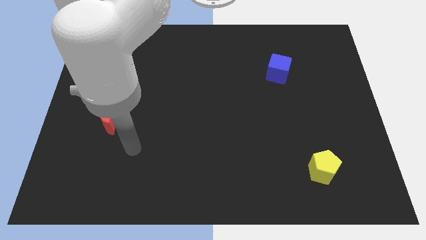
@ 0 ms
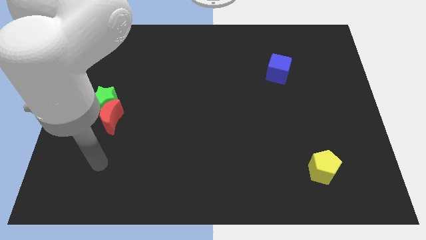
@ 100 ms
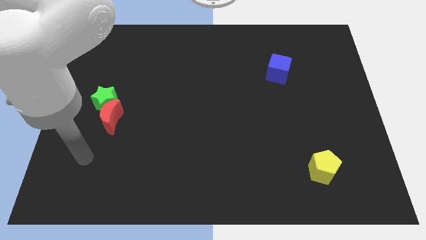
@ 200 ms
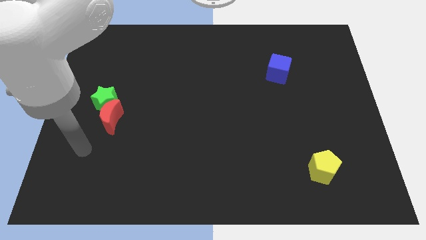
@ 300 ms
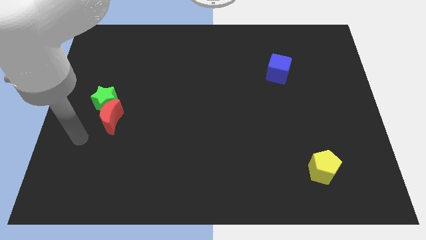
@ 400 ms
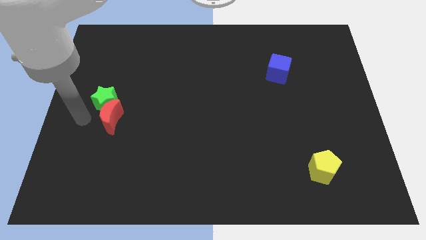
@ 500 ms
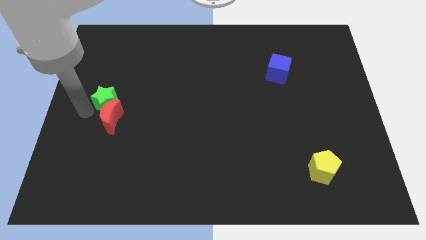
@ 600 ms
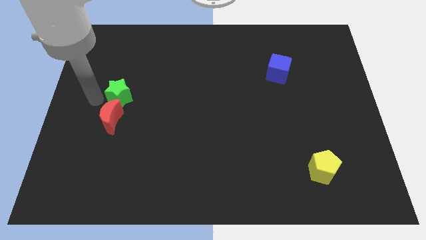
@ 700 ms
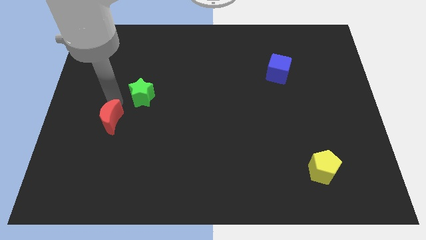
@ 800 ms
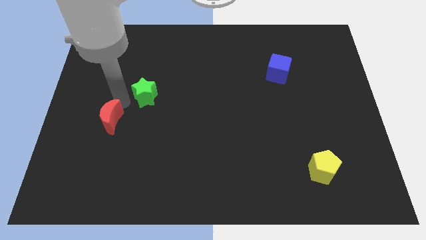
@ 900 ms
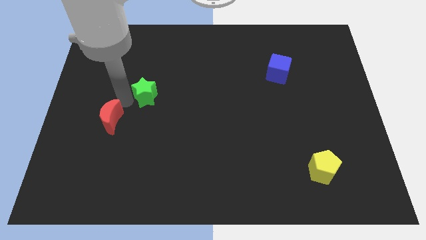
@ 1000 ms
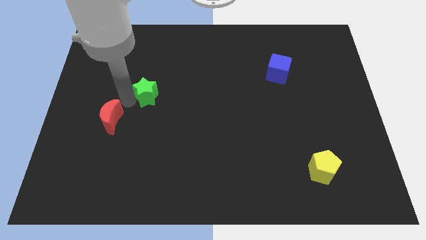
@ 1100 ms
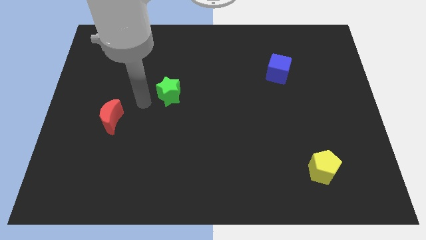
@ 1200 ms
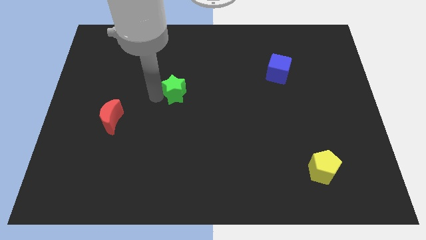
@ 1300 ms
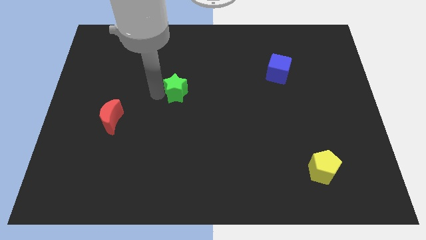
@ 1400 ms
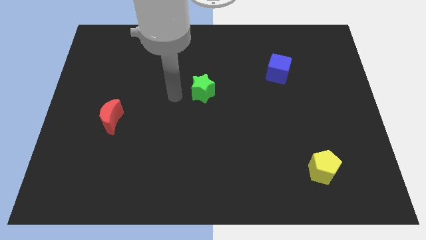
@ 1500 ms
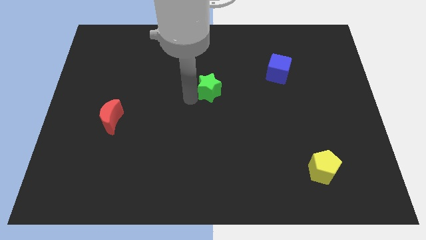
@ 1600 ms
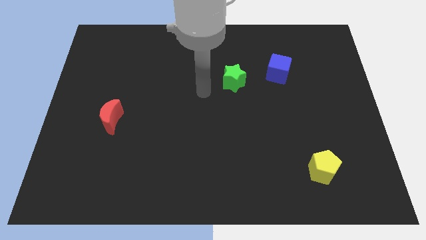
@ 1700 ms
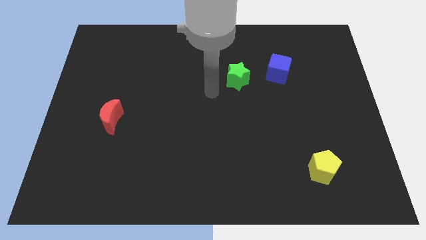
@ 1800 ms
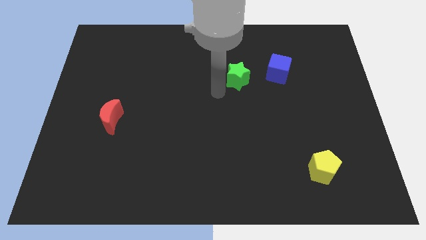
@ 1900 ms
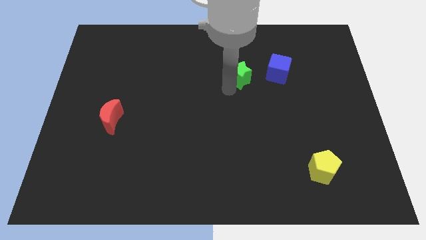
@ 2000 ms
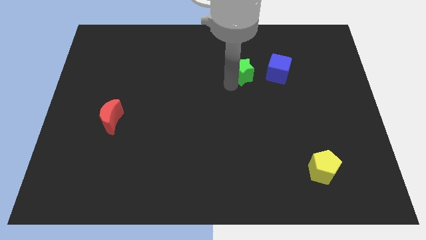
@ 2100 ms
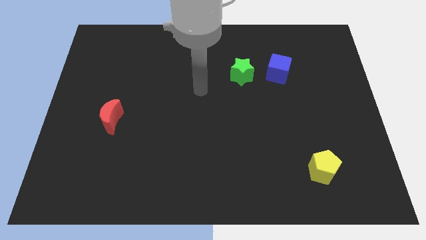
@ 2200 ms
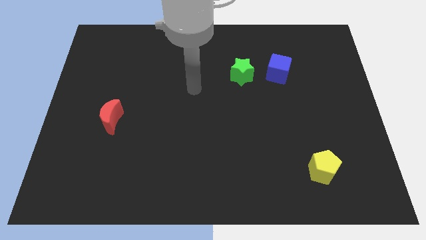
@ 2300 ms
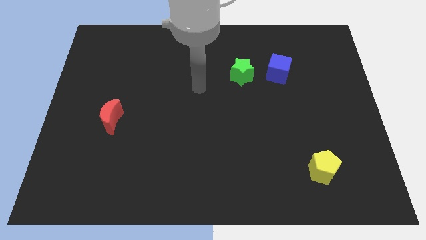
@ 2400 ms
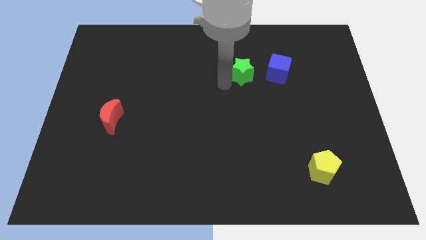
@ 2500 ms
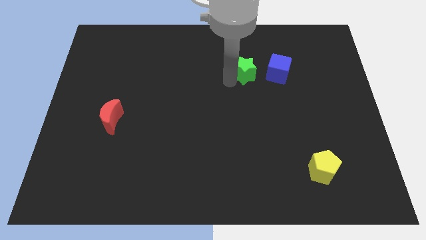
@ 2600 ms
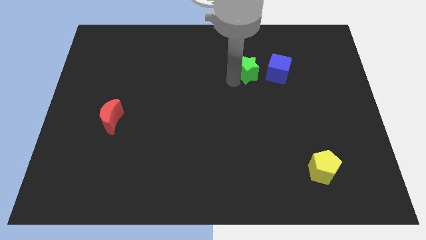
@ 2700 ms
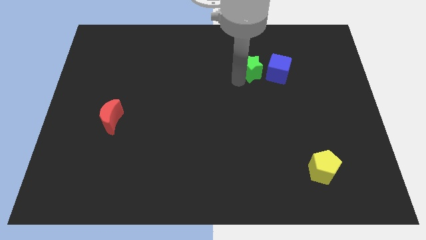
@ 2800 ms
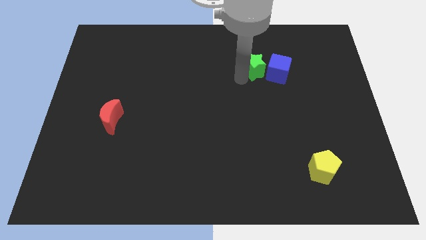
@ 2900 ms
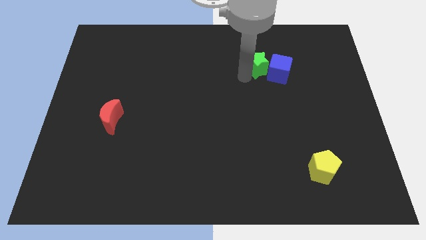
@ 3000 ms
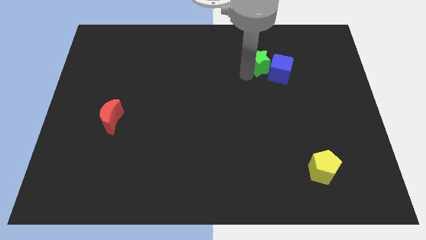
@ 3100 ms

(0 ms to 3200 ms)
move the green star towards the blue block

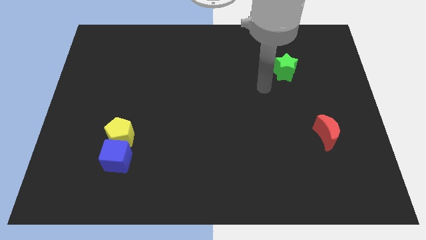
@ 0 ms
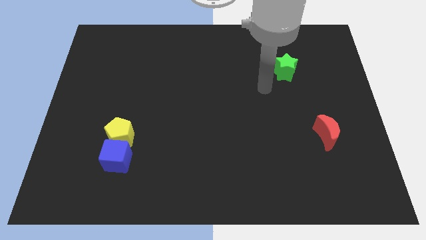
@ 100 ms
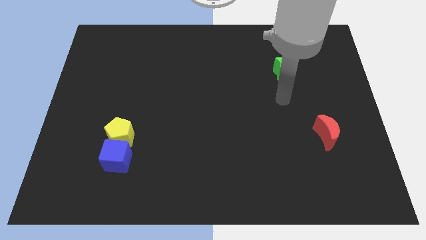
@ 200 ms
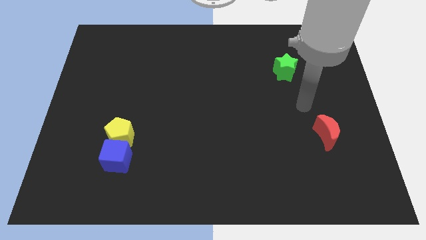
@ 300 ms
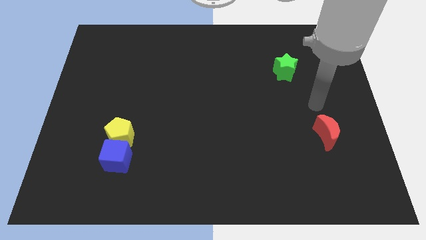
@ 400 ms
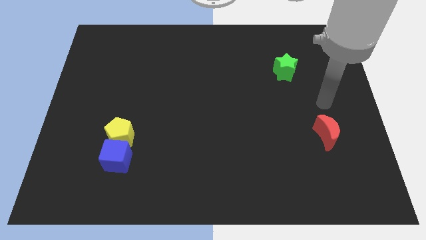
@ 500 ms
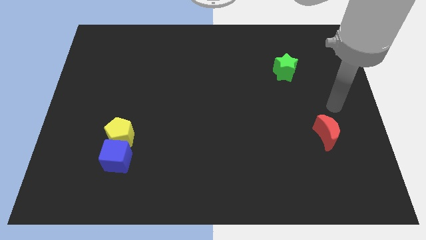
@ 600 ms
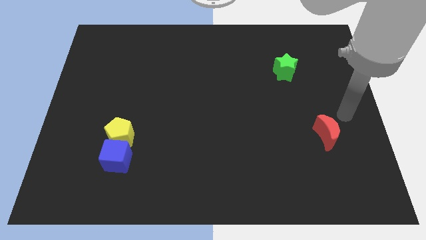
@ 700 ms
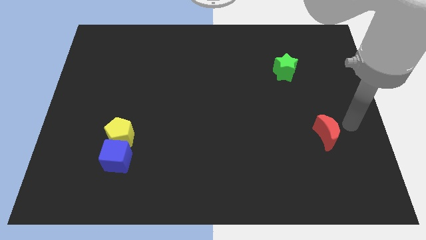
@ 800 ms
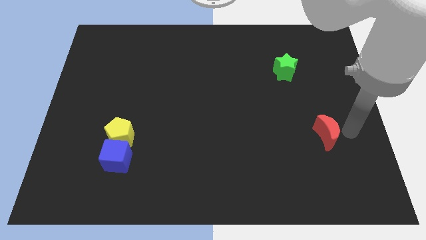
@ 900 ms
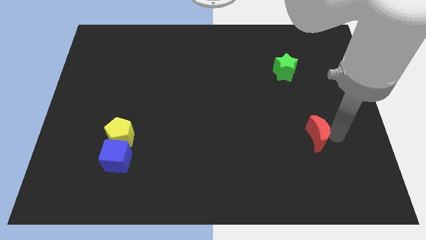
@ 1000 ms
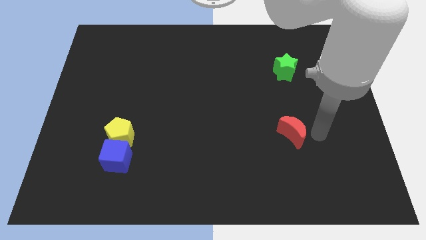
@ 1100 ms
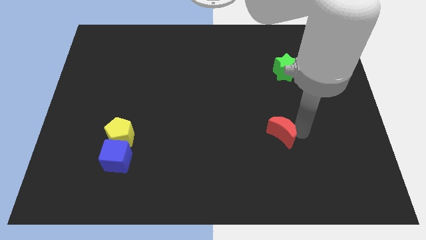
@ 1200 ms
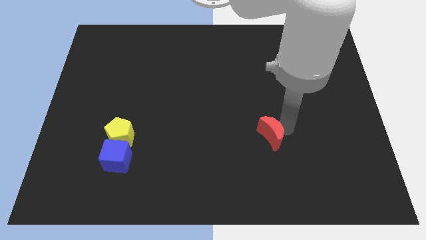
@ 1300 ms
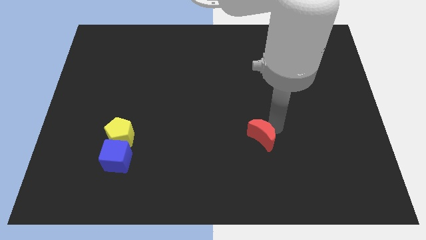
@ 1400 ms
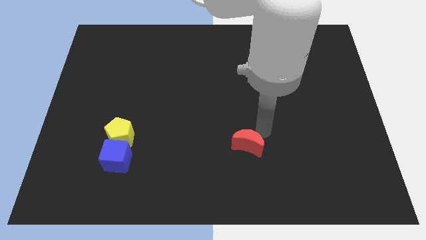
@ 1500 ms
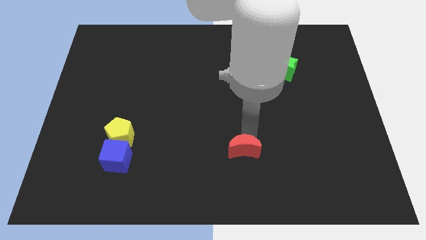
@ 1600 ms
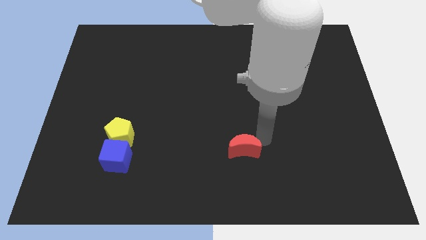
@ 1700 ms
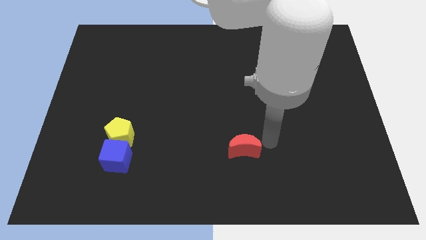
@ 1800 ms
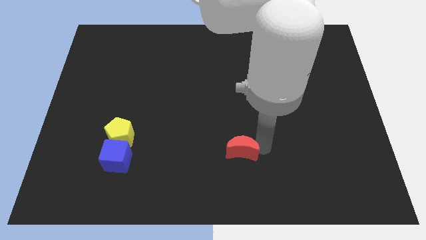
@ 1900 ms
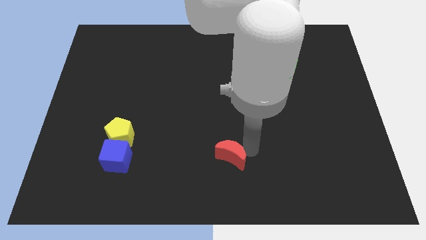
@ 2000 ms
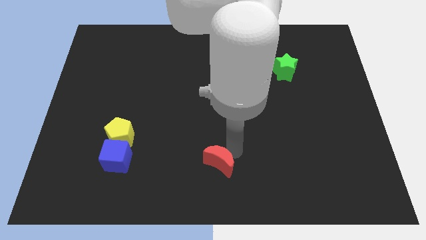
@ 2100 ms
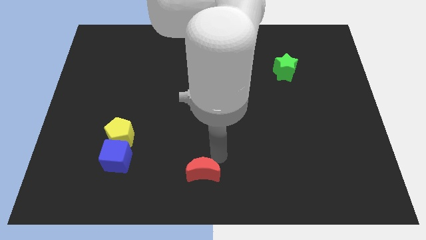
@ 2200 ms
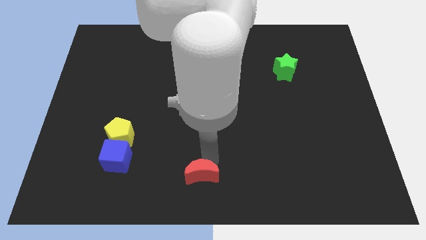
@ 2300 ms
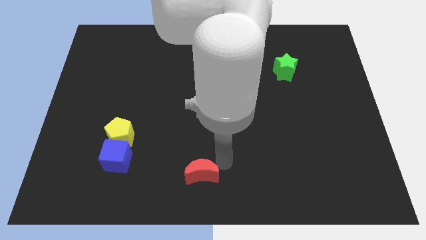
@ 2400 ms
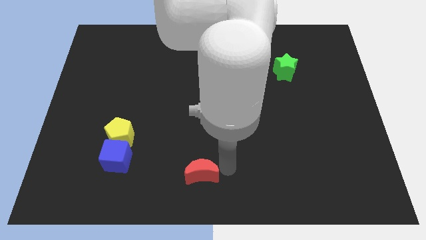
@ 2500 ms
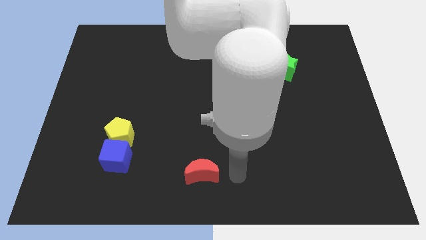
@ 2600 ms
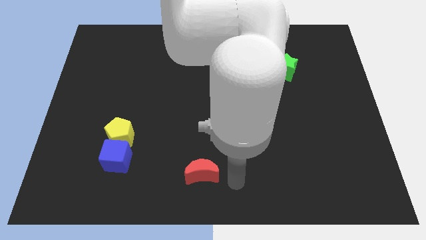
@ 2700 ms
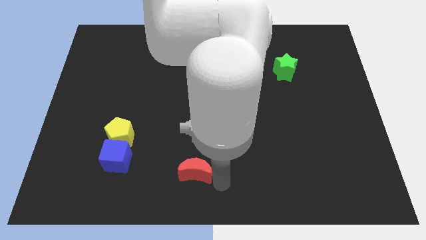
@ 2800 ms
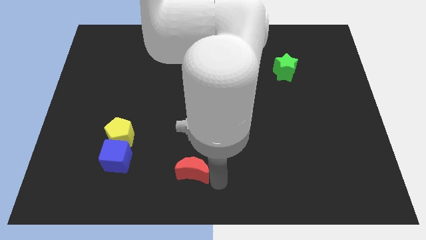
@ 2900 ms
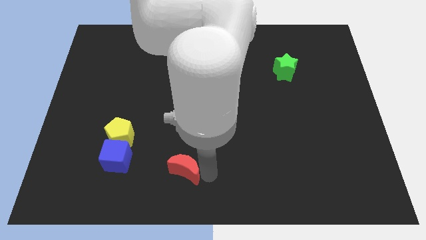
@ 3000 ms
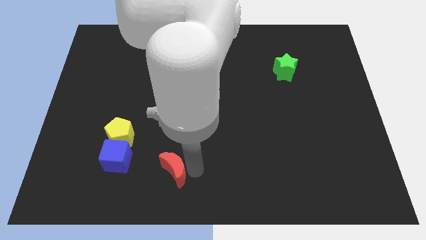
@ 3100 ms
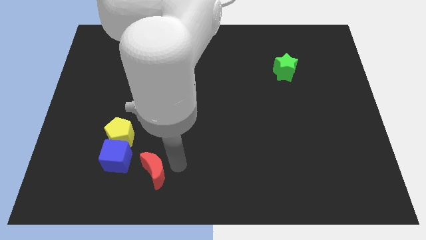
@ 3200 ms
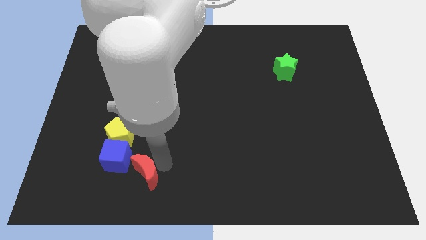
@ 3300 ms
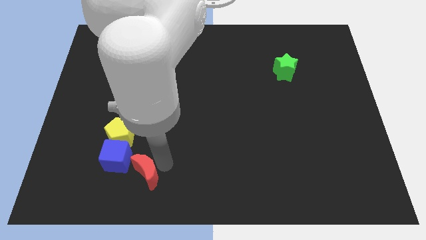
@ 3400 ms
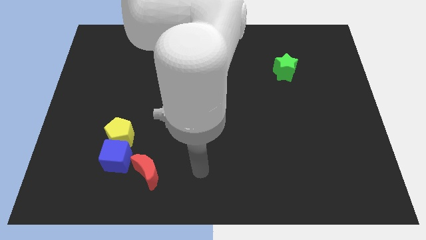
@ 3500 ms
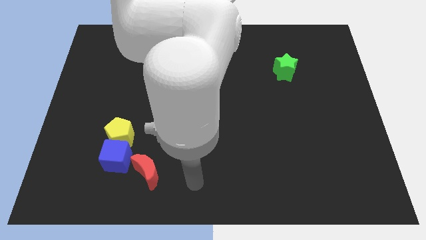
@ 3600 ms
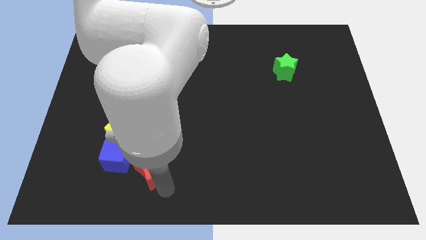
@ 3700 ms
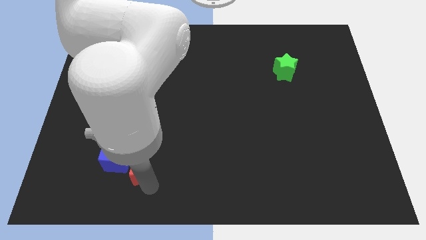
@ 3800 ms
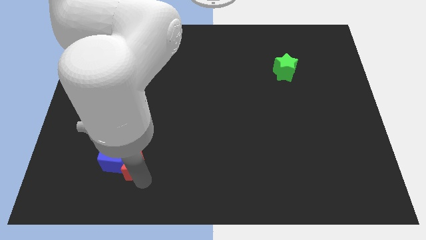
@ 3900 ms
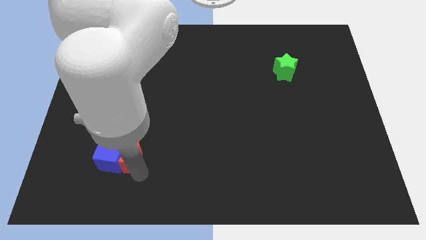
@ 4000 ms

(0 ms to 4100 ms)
push the moon to the blue block

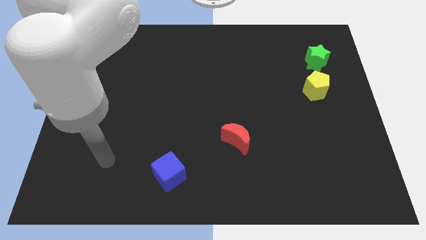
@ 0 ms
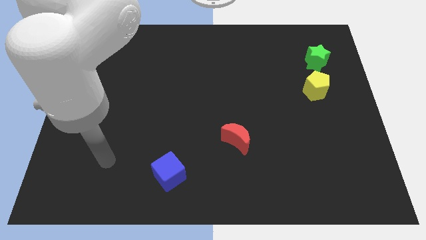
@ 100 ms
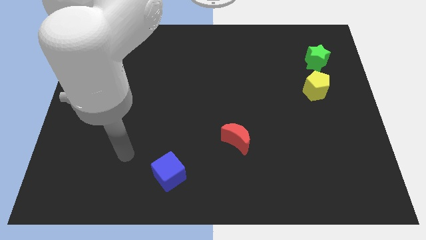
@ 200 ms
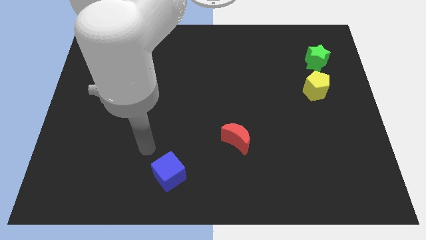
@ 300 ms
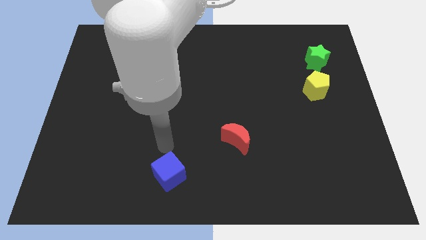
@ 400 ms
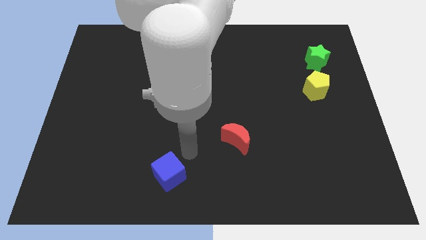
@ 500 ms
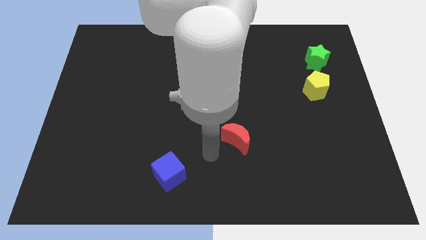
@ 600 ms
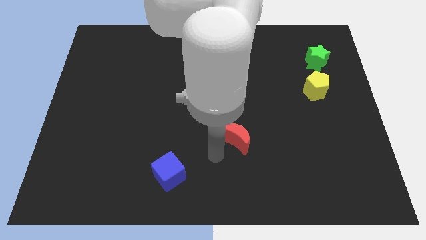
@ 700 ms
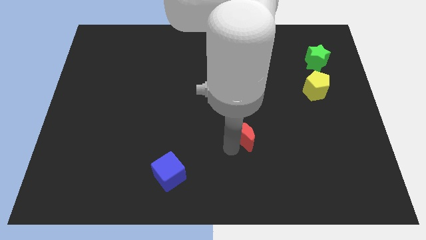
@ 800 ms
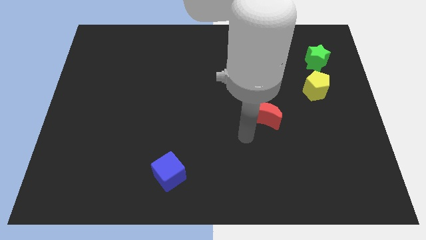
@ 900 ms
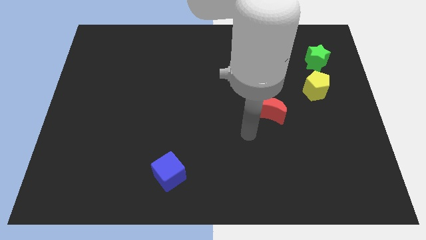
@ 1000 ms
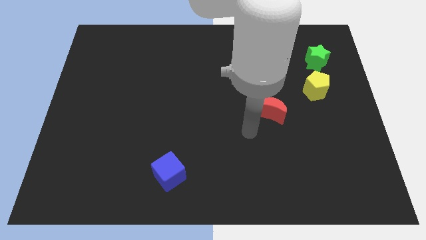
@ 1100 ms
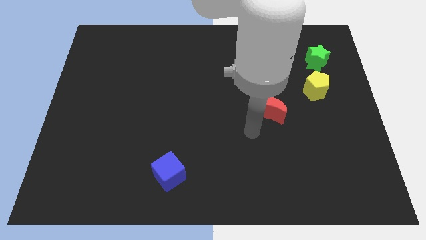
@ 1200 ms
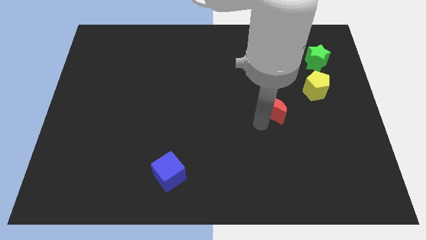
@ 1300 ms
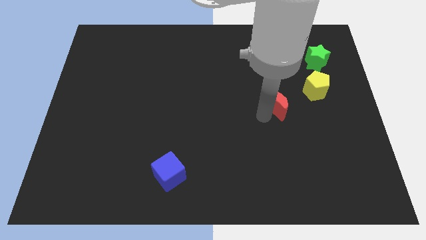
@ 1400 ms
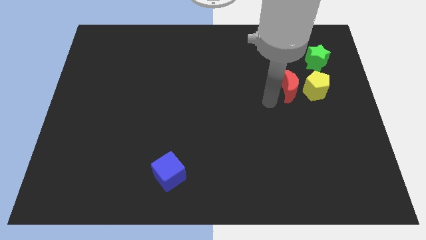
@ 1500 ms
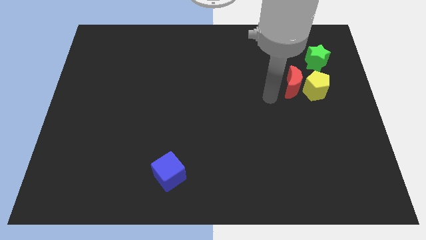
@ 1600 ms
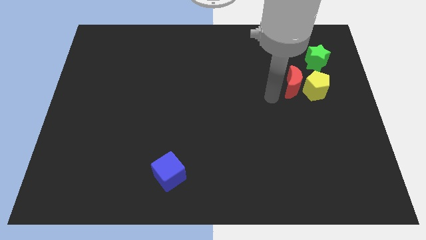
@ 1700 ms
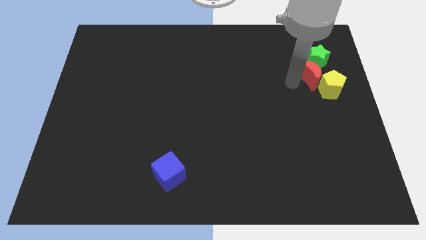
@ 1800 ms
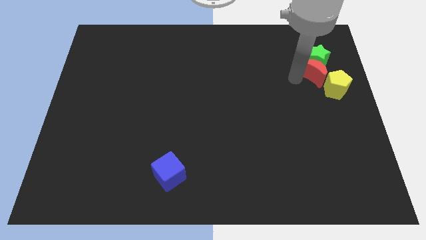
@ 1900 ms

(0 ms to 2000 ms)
move the red block towards the green star
